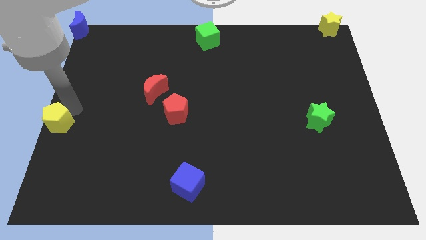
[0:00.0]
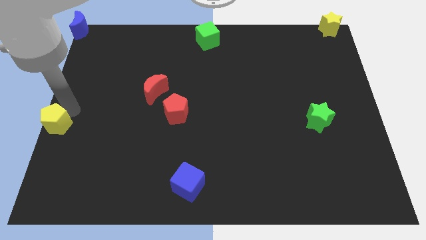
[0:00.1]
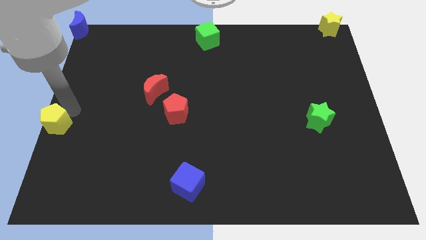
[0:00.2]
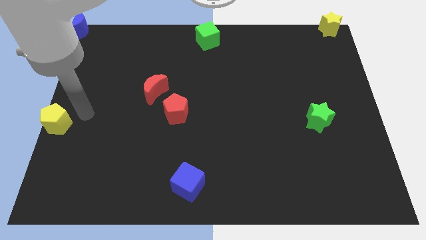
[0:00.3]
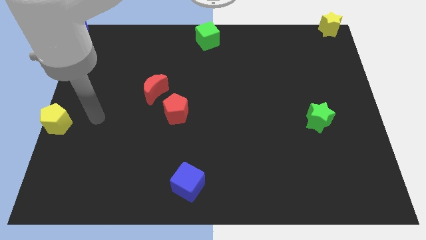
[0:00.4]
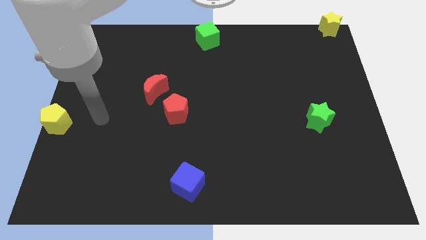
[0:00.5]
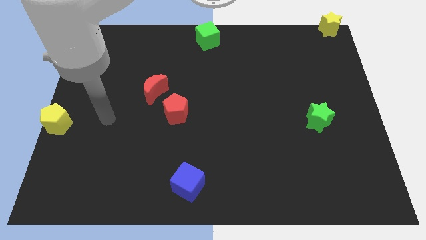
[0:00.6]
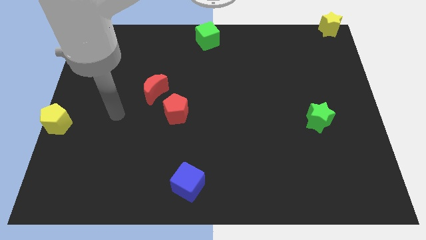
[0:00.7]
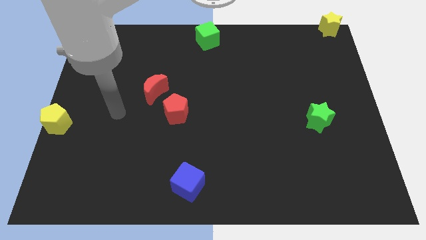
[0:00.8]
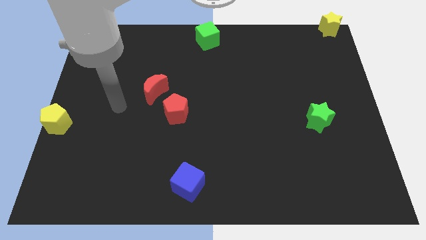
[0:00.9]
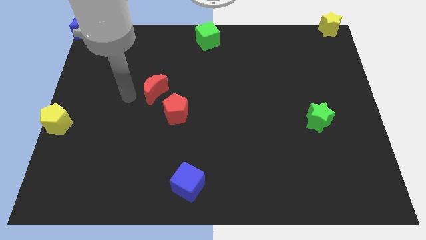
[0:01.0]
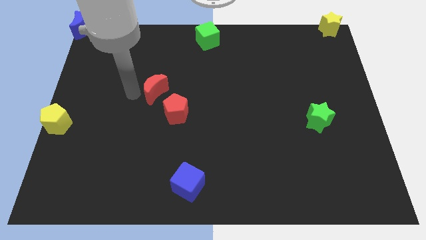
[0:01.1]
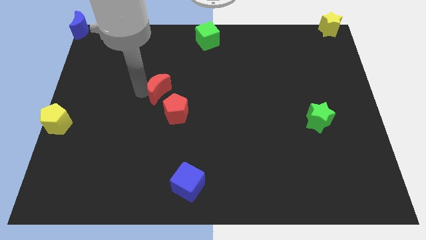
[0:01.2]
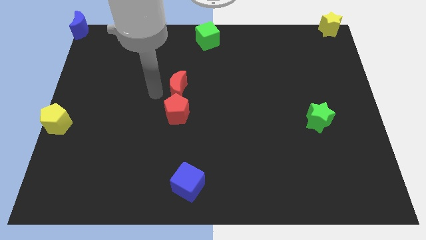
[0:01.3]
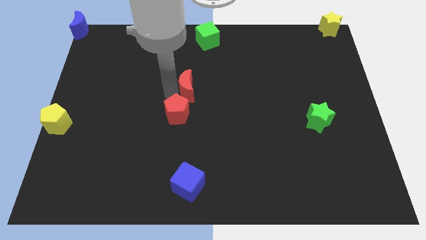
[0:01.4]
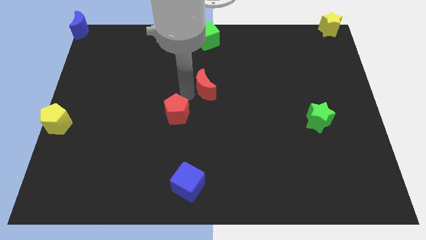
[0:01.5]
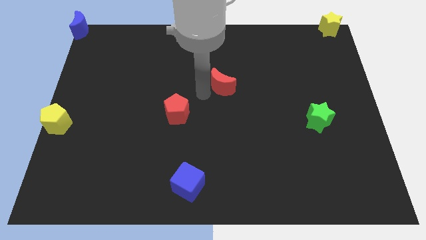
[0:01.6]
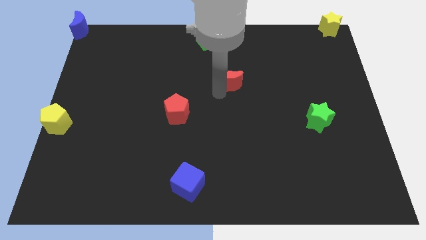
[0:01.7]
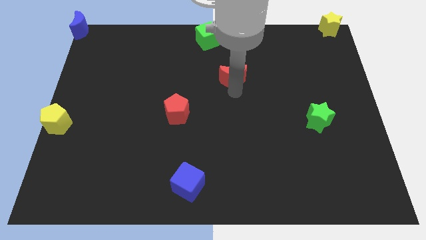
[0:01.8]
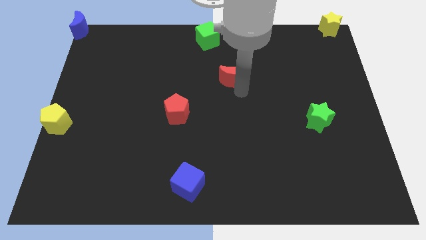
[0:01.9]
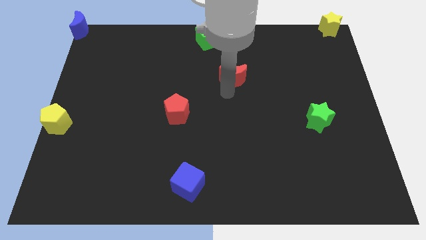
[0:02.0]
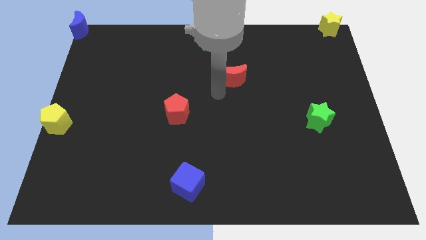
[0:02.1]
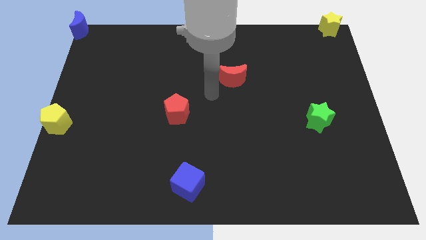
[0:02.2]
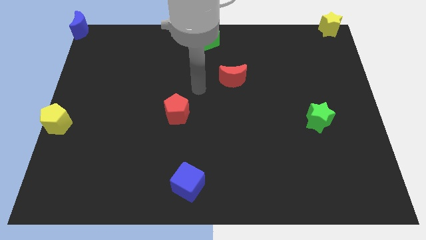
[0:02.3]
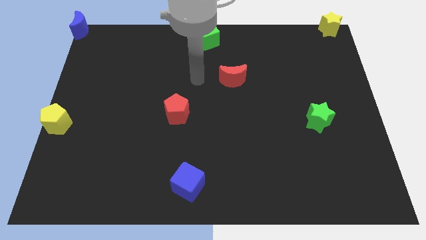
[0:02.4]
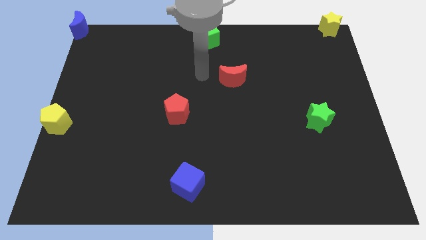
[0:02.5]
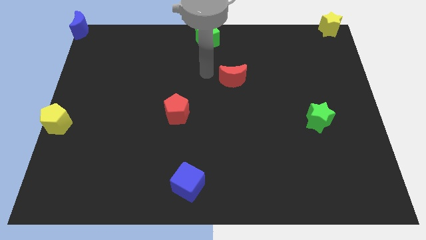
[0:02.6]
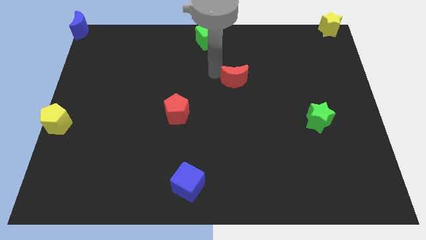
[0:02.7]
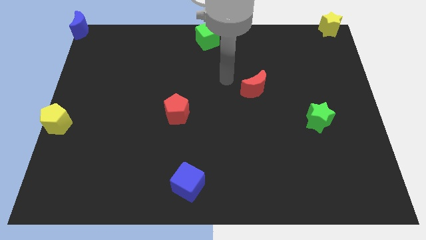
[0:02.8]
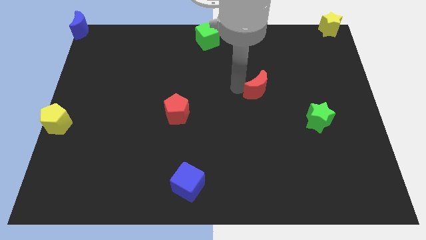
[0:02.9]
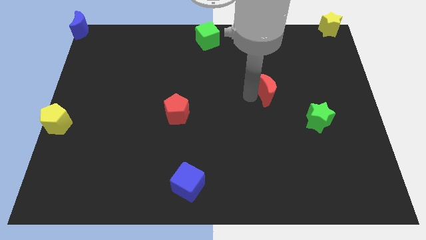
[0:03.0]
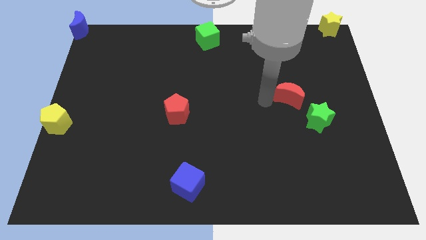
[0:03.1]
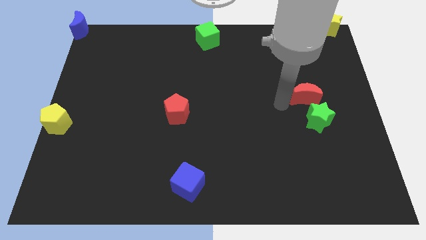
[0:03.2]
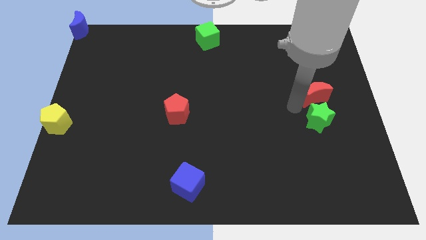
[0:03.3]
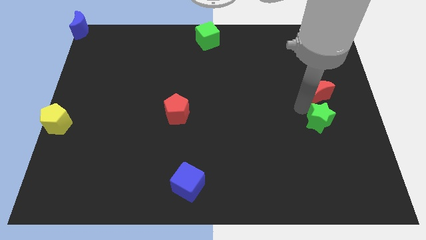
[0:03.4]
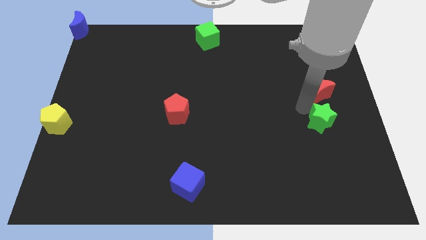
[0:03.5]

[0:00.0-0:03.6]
place red moon above green star

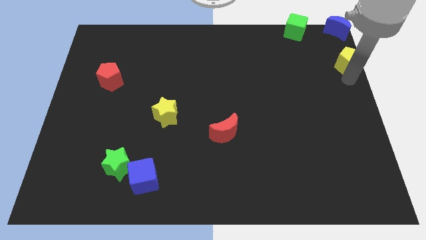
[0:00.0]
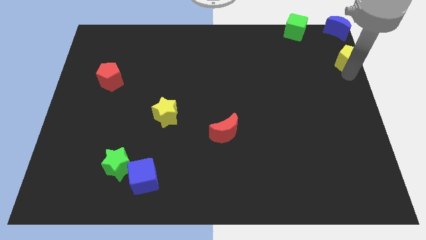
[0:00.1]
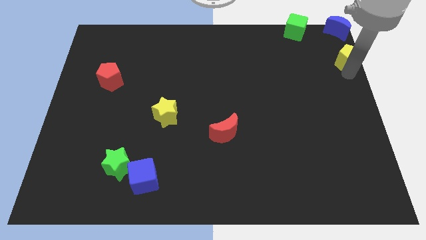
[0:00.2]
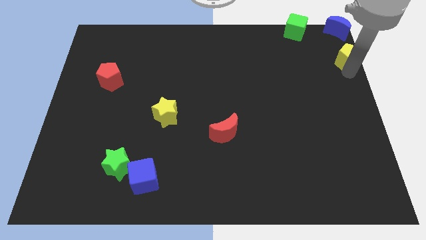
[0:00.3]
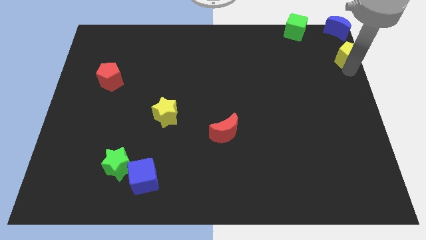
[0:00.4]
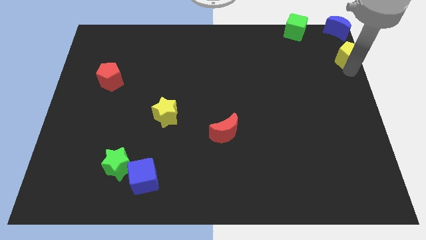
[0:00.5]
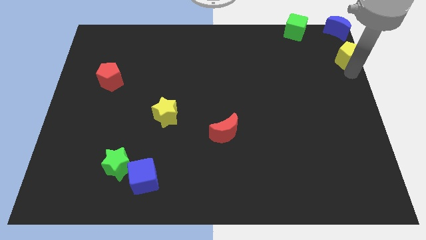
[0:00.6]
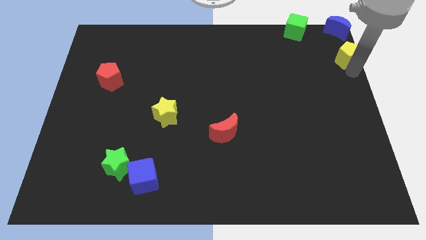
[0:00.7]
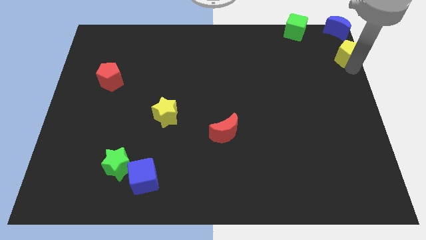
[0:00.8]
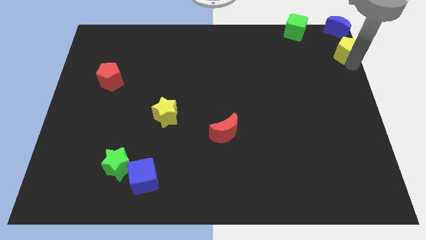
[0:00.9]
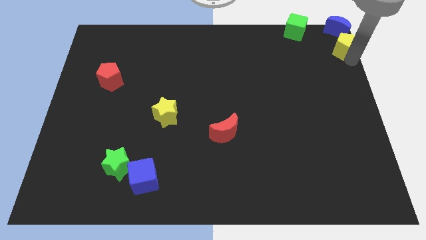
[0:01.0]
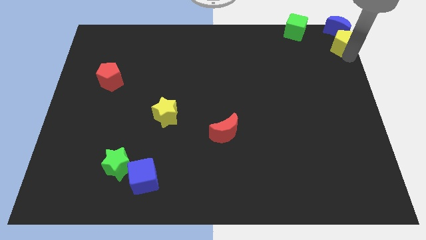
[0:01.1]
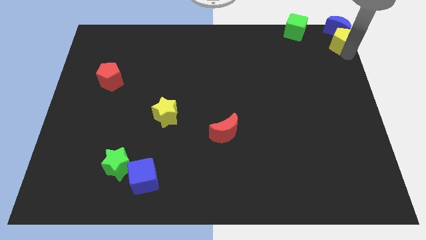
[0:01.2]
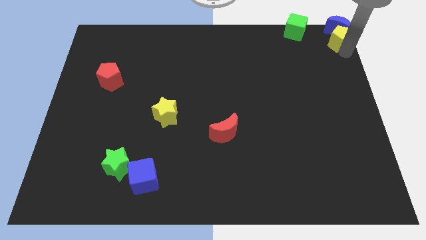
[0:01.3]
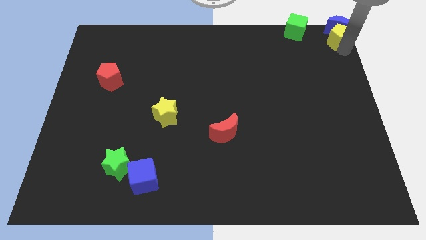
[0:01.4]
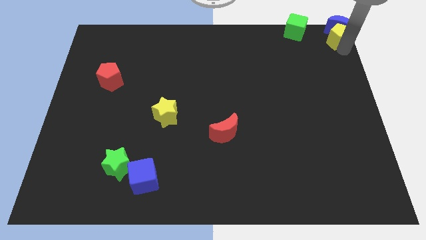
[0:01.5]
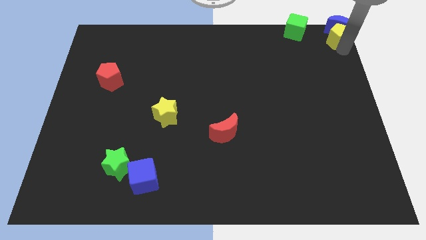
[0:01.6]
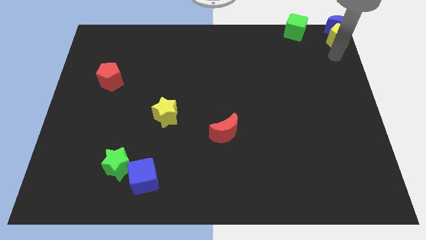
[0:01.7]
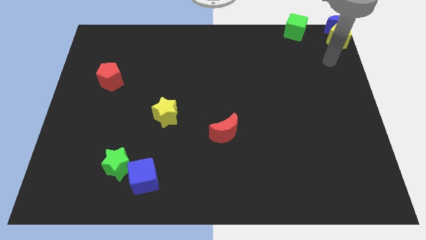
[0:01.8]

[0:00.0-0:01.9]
push the yellow pentagon into the blue moon

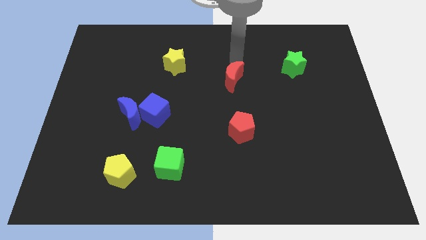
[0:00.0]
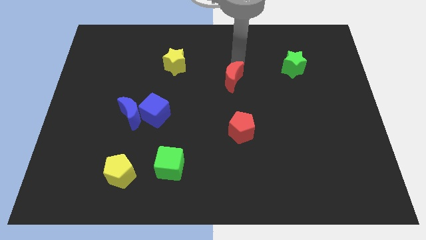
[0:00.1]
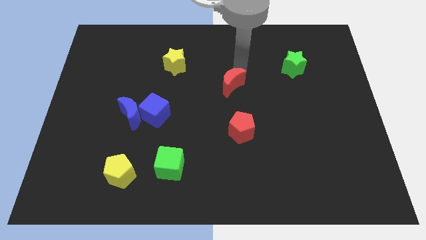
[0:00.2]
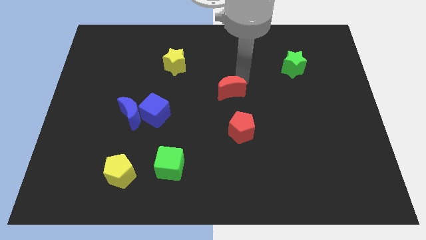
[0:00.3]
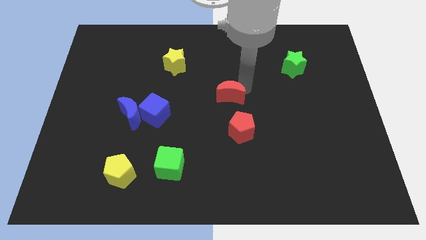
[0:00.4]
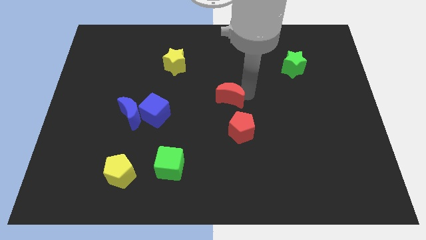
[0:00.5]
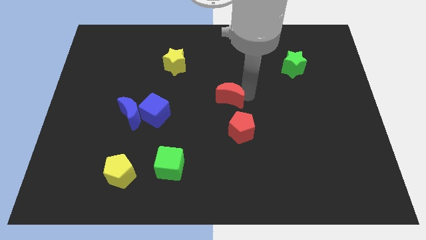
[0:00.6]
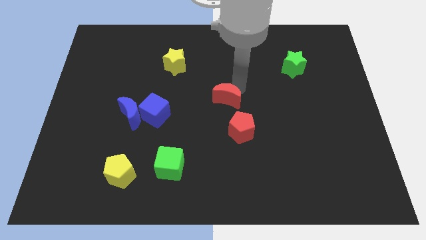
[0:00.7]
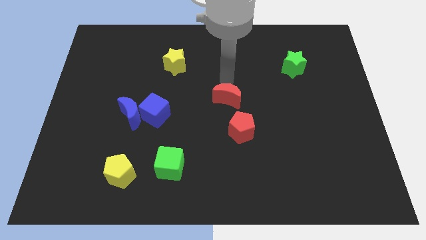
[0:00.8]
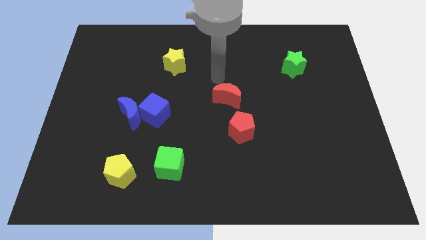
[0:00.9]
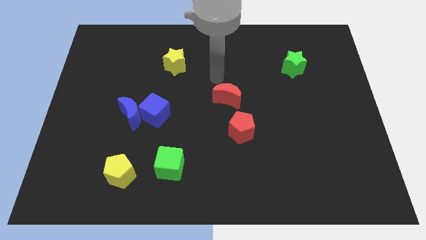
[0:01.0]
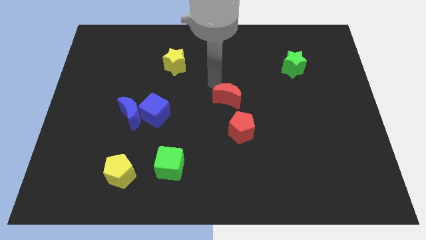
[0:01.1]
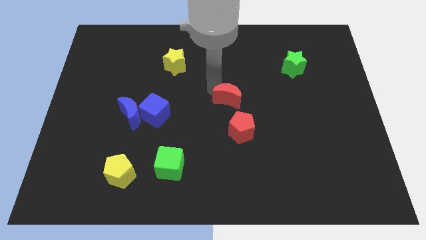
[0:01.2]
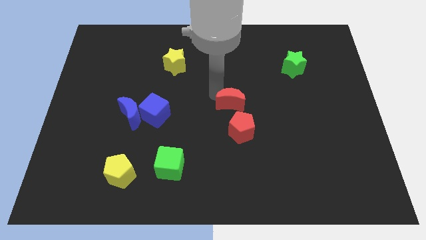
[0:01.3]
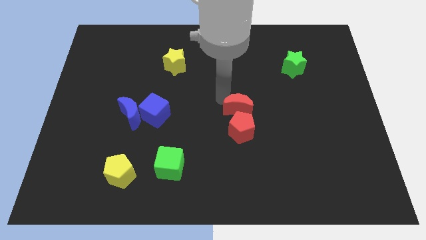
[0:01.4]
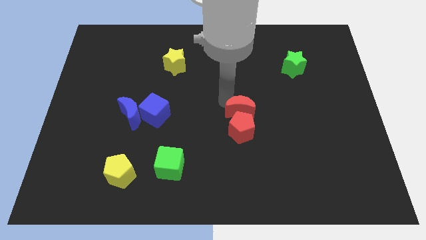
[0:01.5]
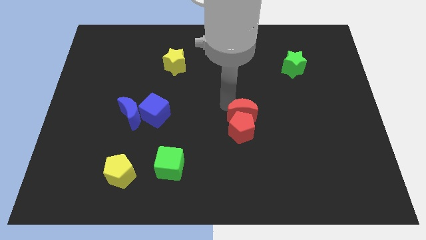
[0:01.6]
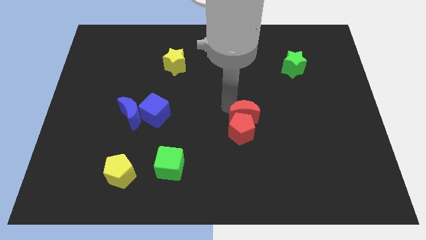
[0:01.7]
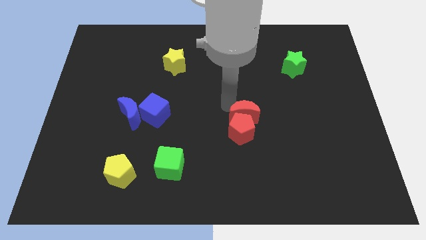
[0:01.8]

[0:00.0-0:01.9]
place the red crescent above the red pentagon

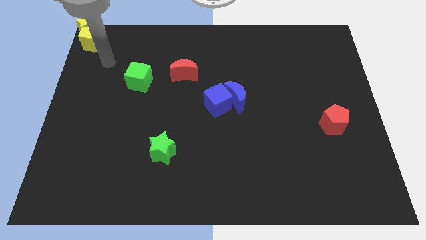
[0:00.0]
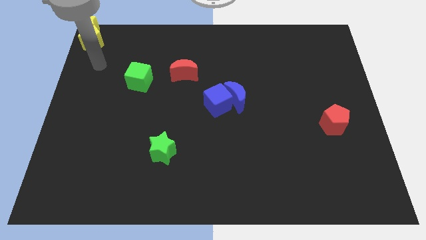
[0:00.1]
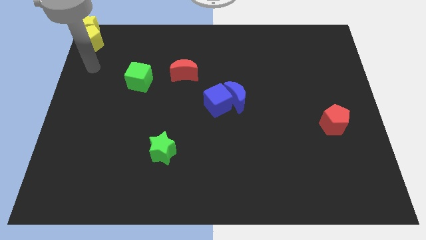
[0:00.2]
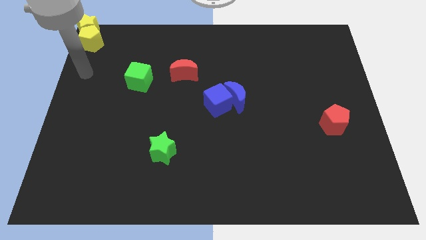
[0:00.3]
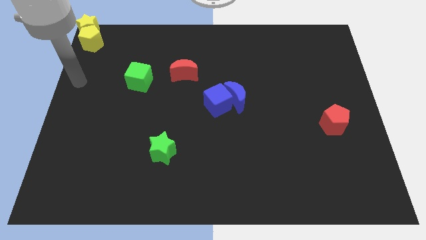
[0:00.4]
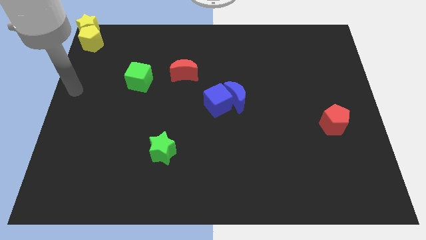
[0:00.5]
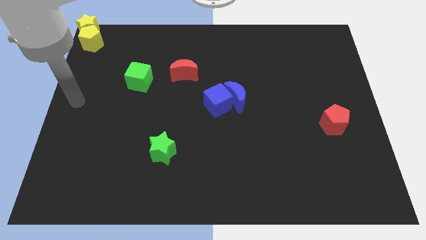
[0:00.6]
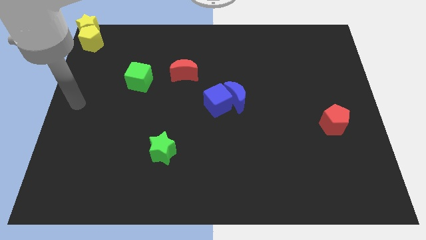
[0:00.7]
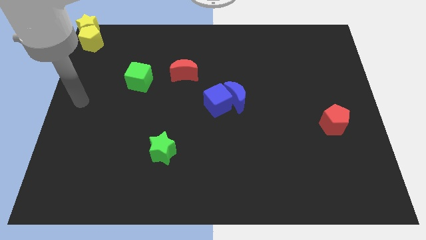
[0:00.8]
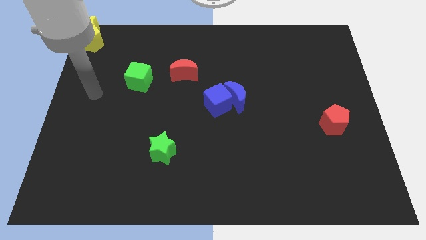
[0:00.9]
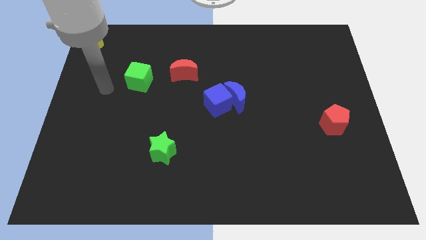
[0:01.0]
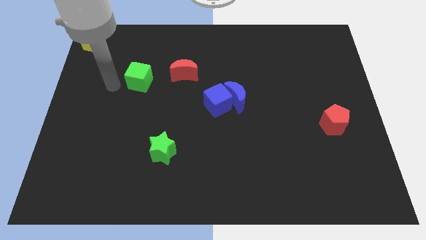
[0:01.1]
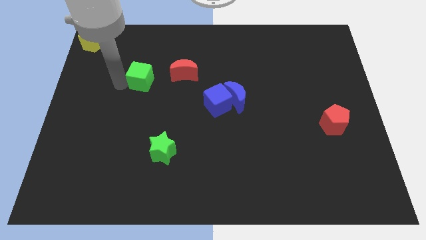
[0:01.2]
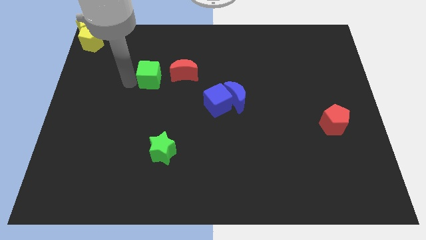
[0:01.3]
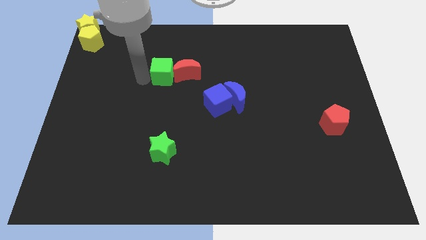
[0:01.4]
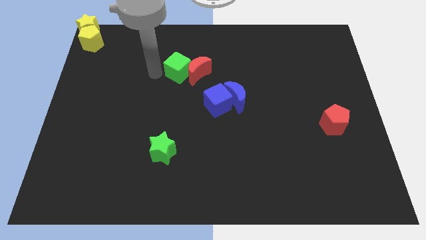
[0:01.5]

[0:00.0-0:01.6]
move green cube into the red moon

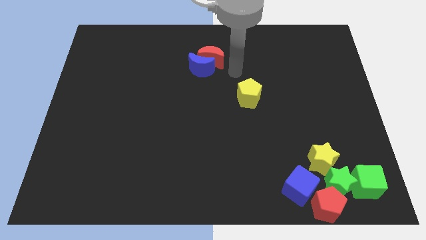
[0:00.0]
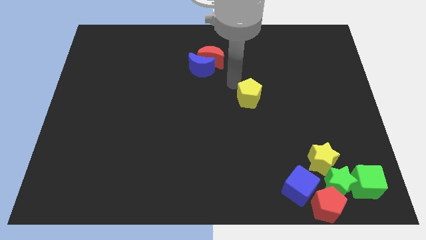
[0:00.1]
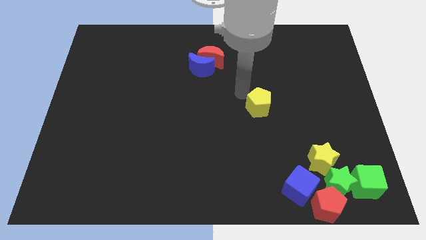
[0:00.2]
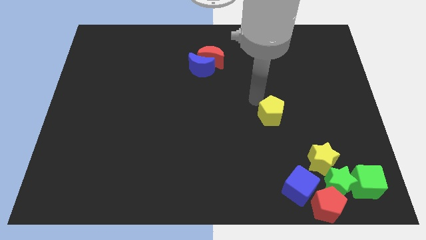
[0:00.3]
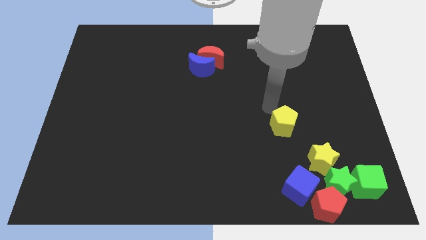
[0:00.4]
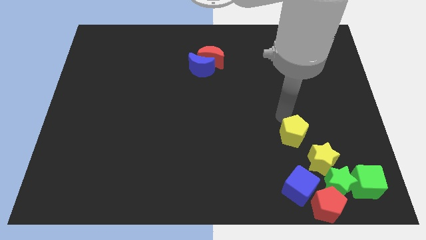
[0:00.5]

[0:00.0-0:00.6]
move the yellow pentagon to the bottom of the board
